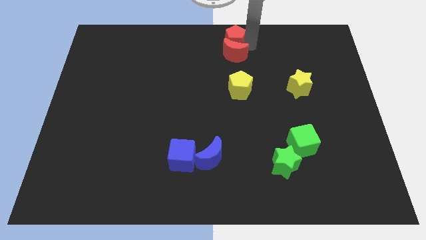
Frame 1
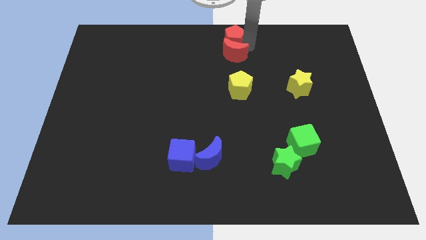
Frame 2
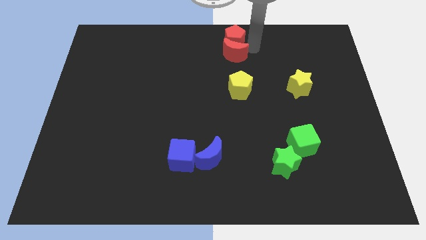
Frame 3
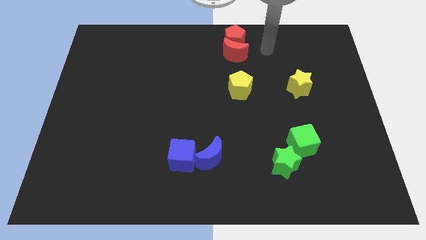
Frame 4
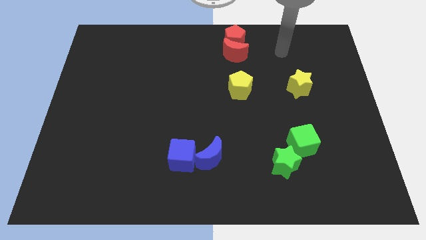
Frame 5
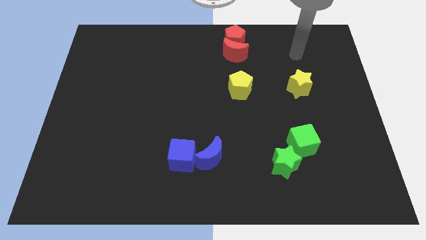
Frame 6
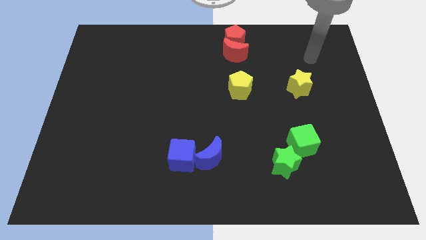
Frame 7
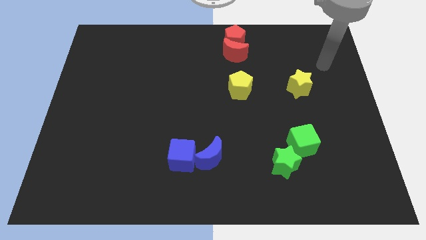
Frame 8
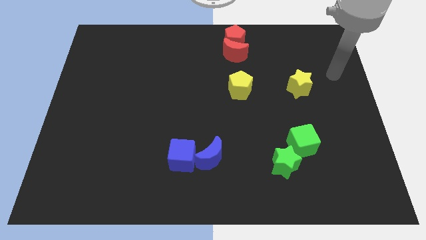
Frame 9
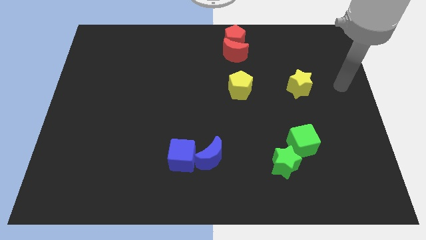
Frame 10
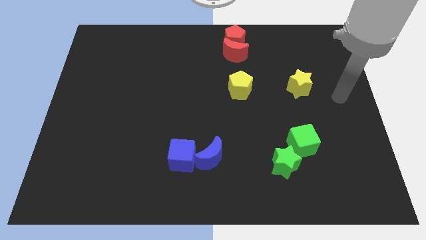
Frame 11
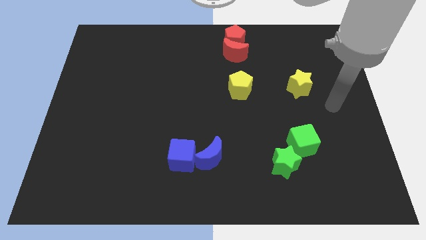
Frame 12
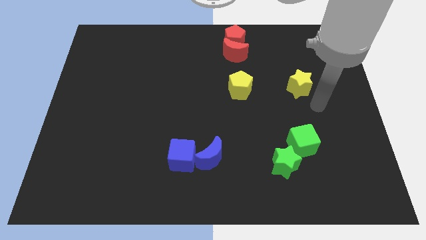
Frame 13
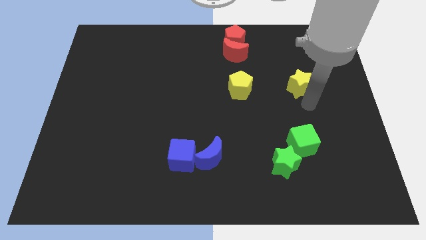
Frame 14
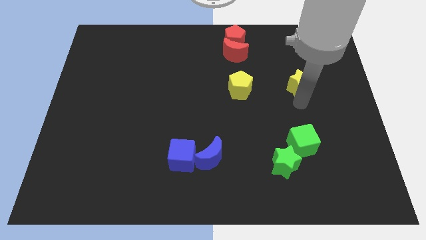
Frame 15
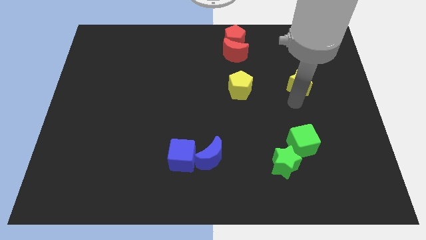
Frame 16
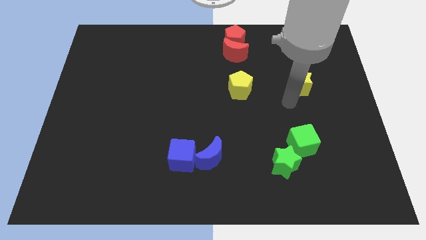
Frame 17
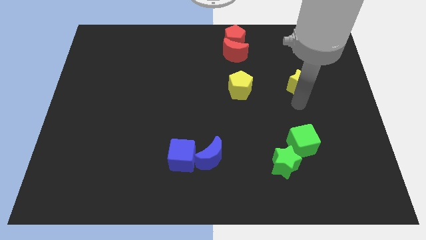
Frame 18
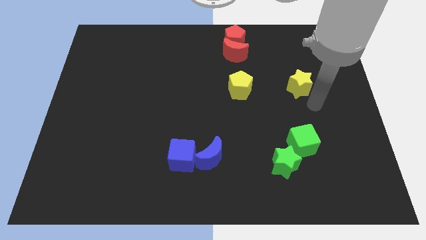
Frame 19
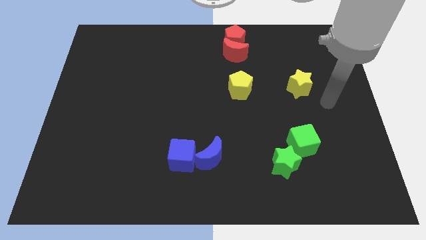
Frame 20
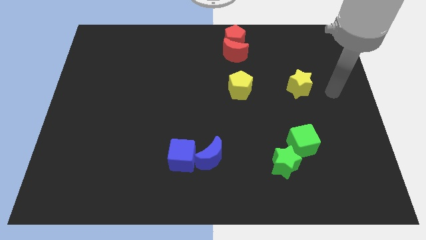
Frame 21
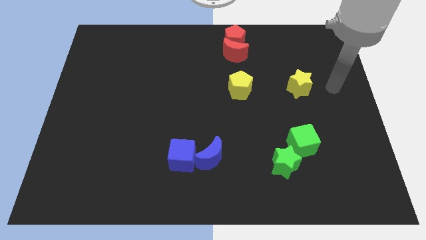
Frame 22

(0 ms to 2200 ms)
move the arm away from the red blocks

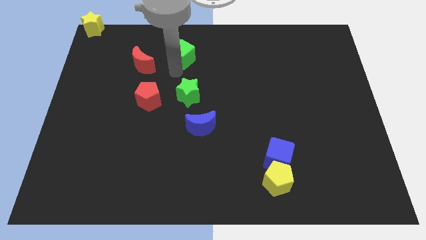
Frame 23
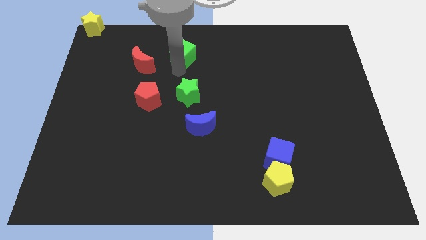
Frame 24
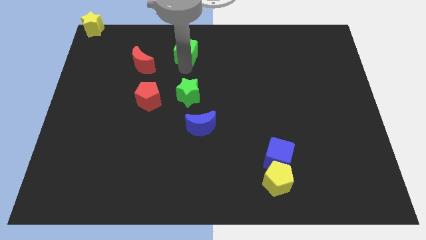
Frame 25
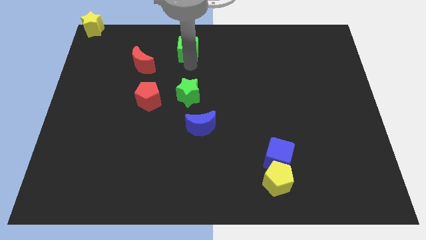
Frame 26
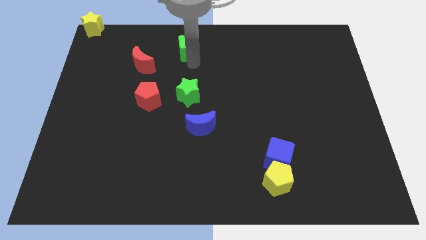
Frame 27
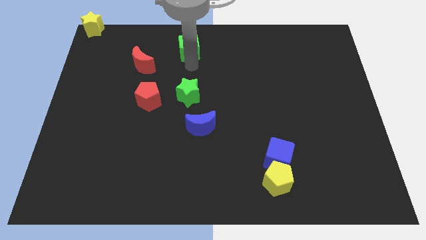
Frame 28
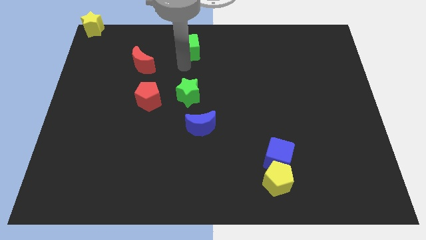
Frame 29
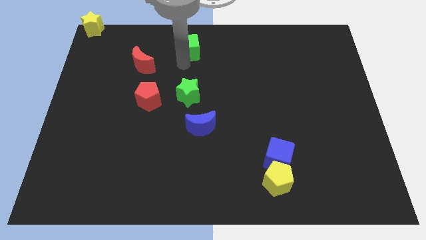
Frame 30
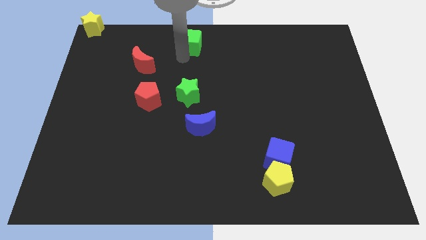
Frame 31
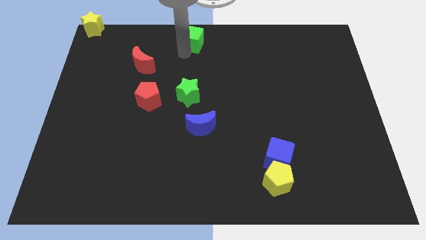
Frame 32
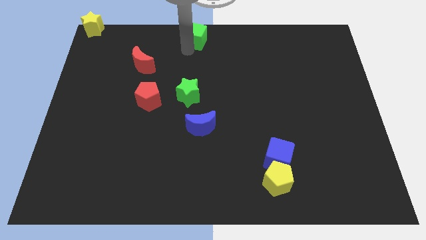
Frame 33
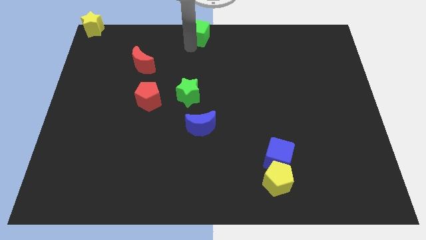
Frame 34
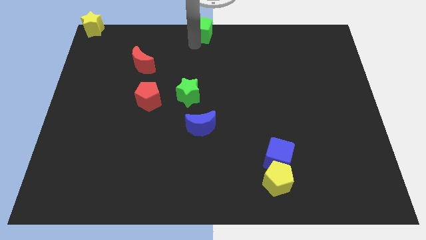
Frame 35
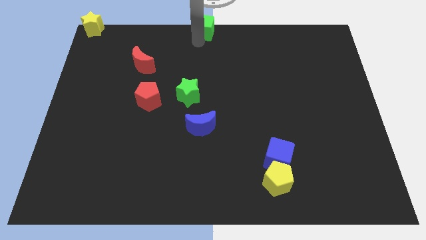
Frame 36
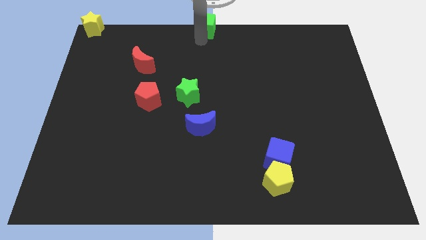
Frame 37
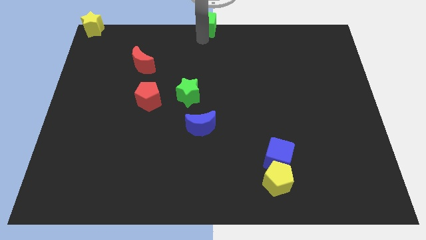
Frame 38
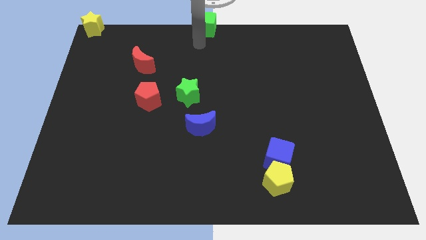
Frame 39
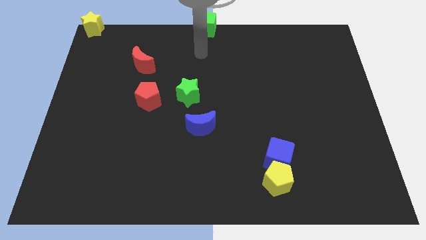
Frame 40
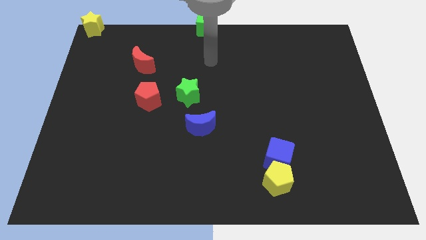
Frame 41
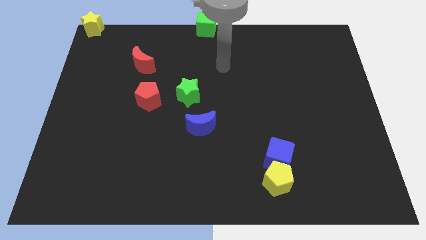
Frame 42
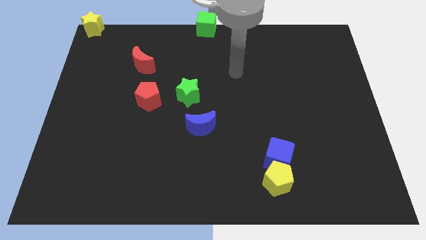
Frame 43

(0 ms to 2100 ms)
place green cube in the top center

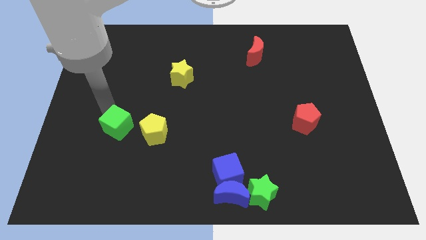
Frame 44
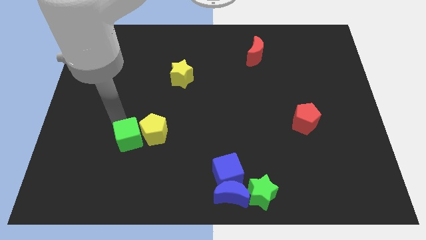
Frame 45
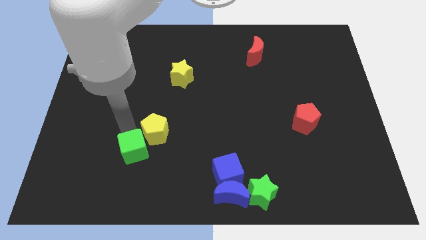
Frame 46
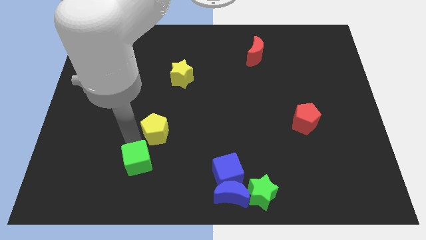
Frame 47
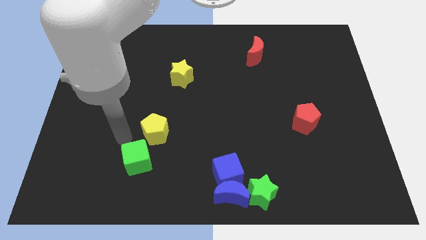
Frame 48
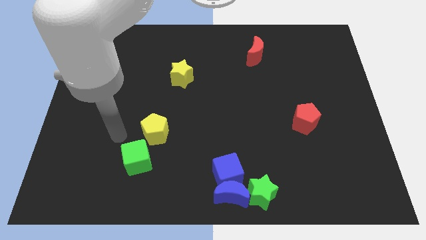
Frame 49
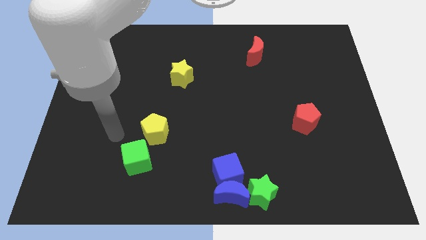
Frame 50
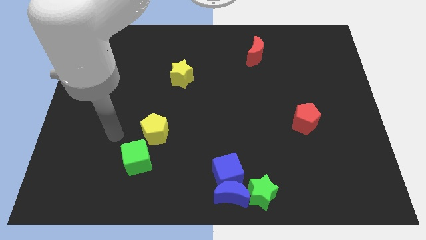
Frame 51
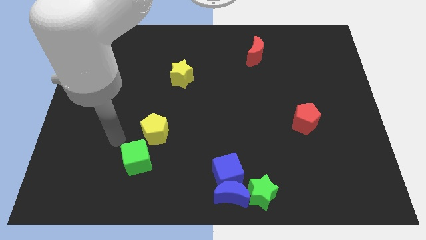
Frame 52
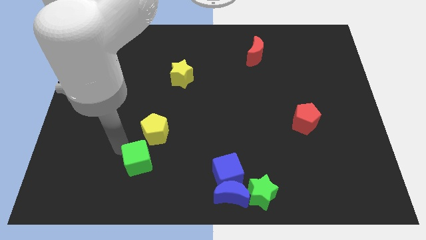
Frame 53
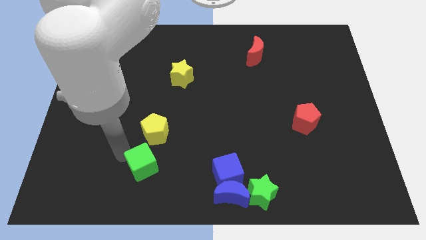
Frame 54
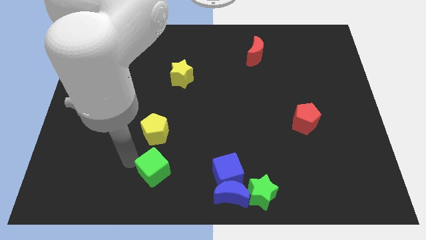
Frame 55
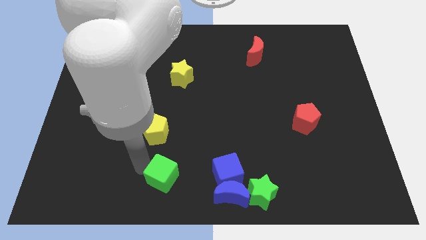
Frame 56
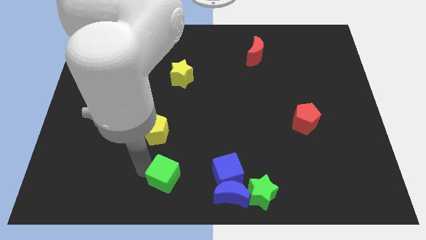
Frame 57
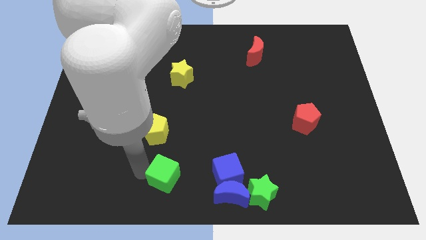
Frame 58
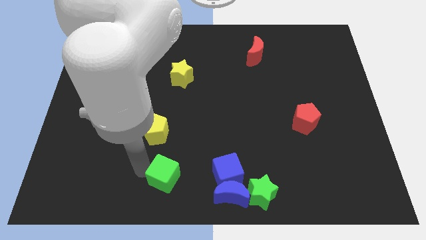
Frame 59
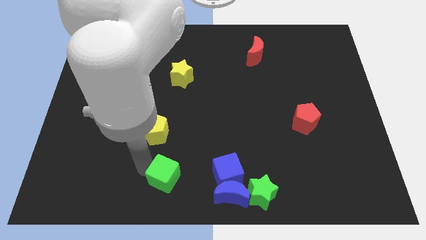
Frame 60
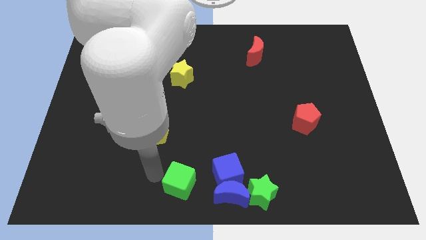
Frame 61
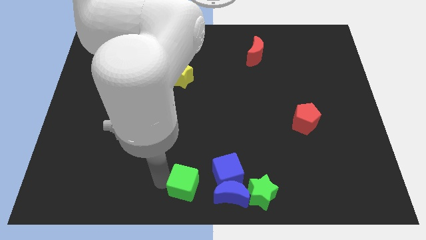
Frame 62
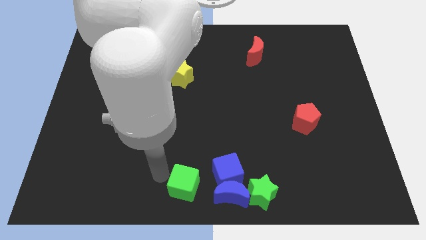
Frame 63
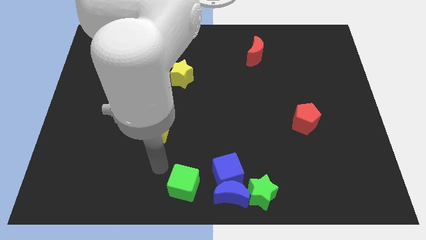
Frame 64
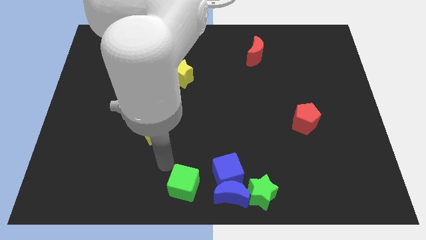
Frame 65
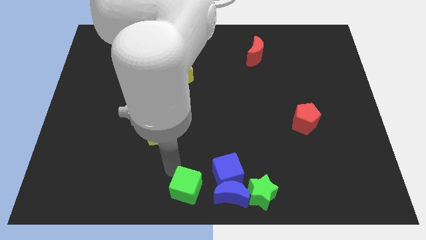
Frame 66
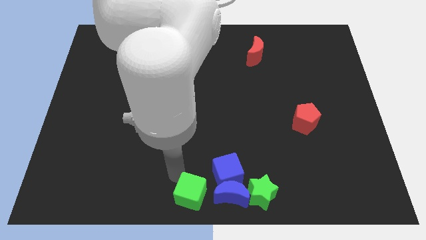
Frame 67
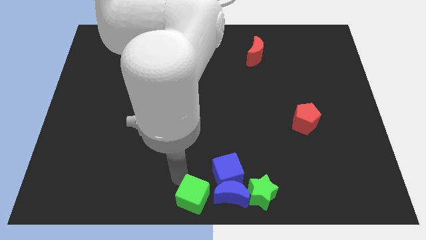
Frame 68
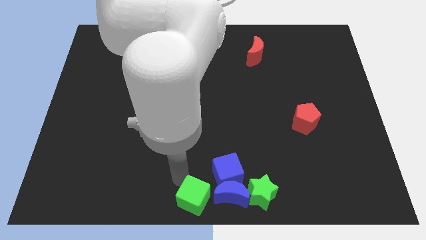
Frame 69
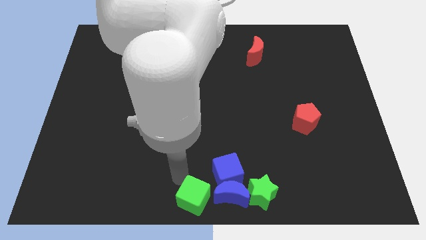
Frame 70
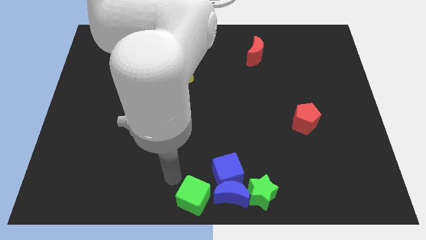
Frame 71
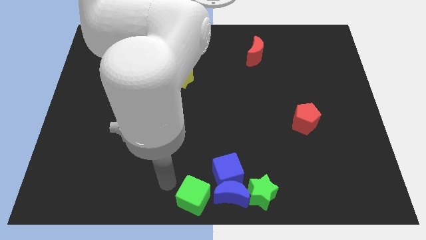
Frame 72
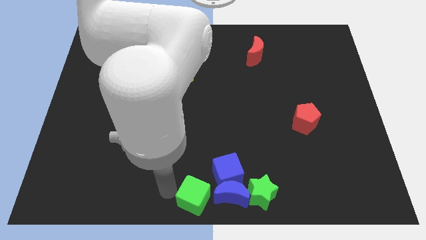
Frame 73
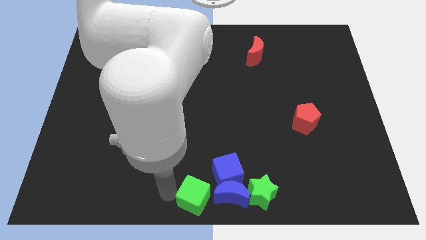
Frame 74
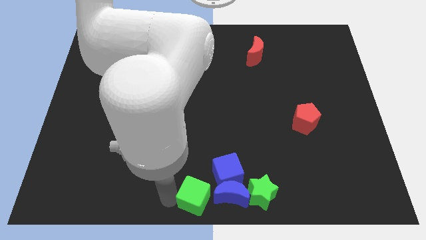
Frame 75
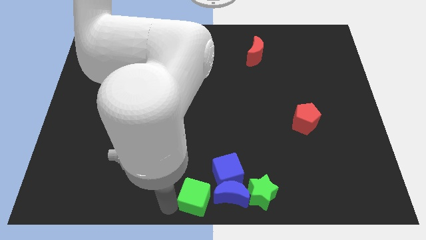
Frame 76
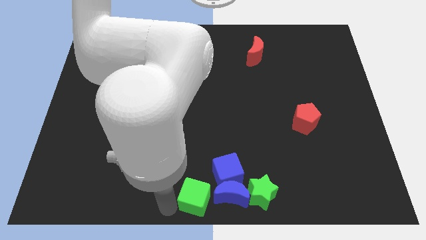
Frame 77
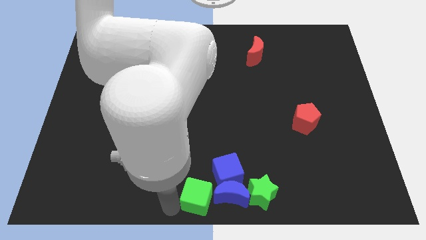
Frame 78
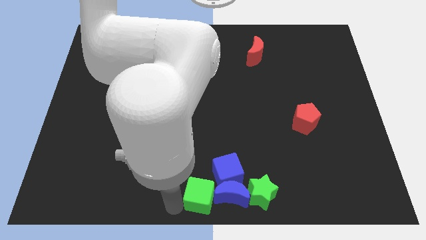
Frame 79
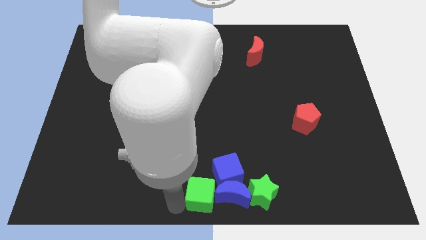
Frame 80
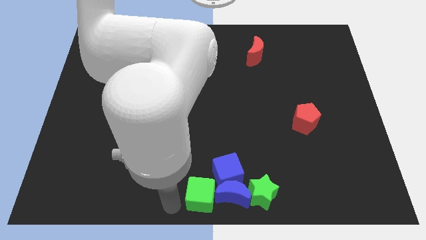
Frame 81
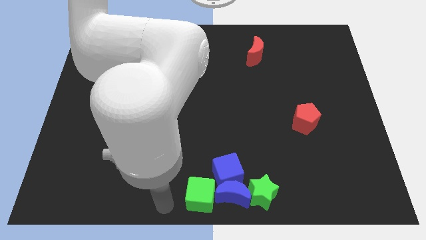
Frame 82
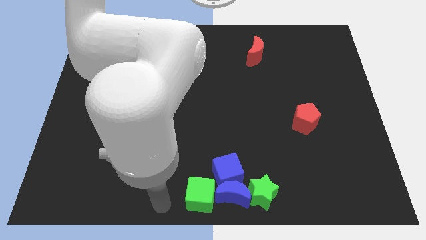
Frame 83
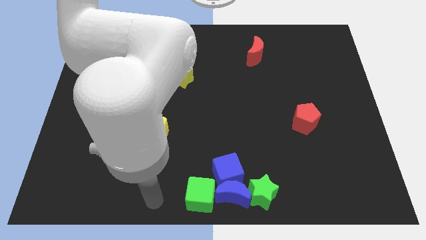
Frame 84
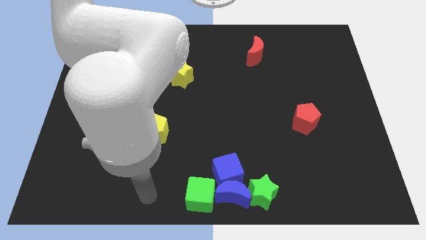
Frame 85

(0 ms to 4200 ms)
push the green cube to the left of the blue crescent

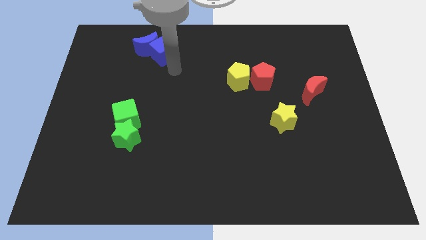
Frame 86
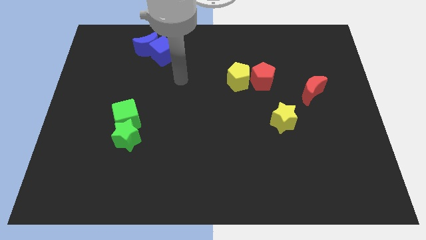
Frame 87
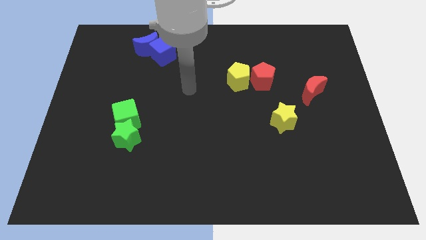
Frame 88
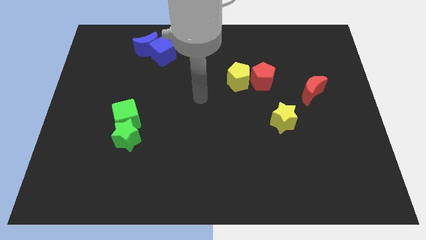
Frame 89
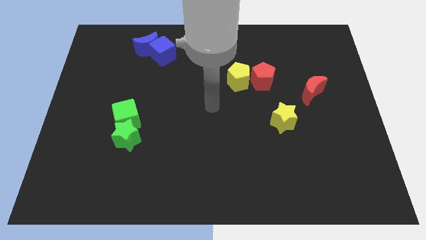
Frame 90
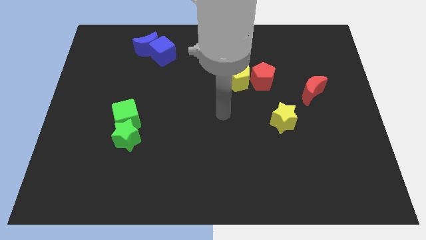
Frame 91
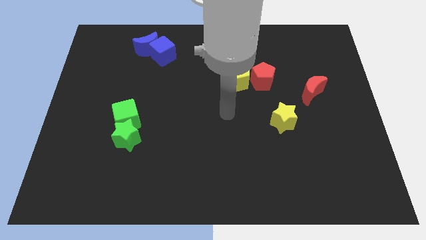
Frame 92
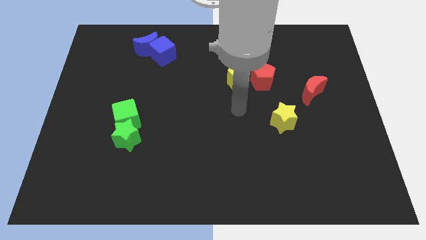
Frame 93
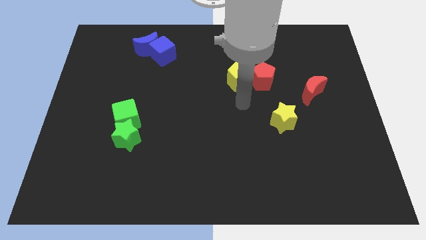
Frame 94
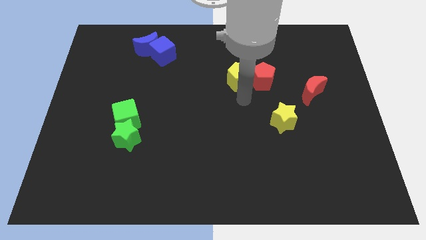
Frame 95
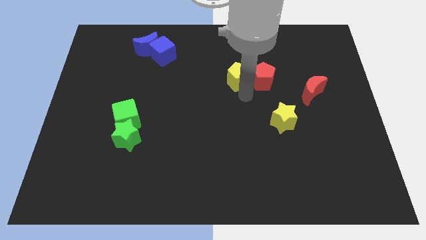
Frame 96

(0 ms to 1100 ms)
move your arm away from the blue cube
